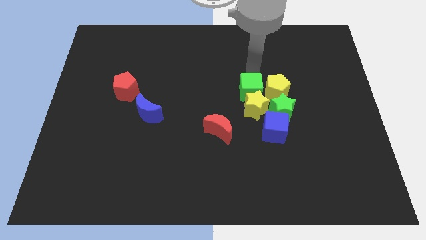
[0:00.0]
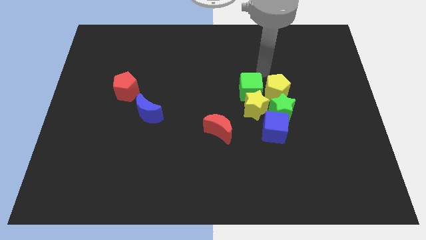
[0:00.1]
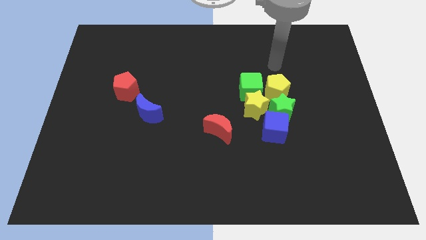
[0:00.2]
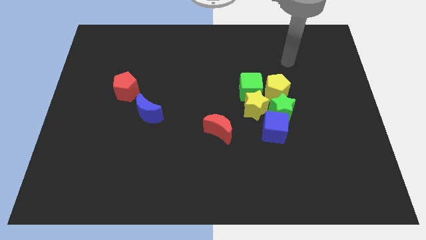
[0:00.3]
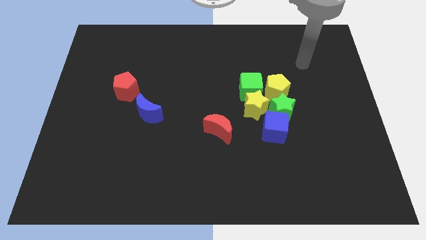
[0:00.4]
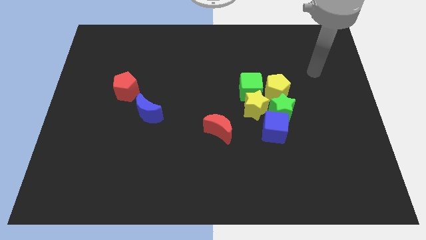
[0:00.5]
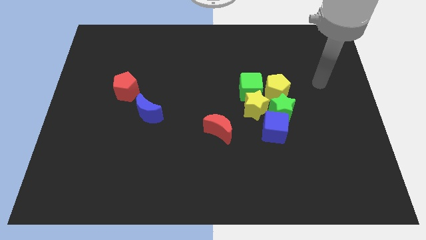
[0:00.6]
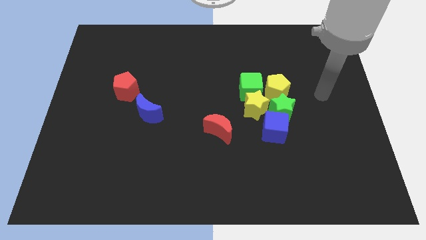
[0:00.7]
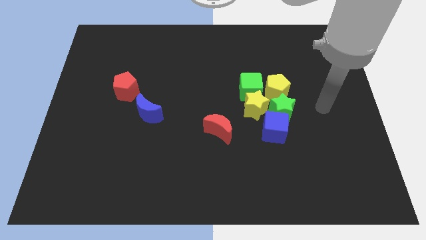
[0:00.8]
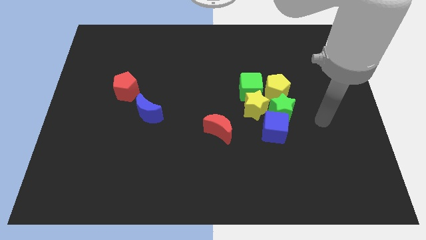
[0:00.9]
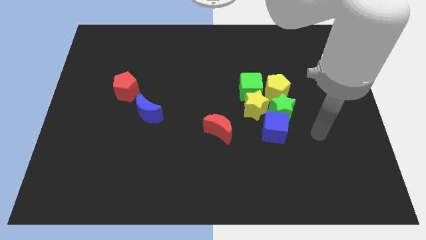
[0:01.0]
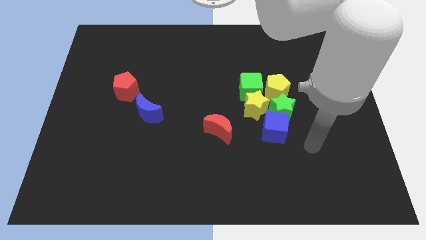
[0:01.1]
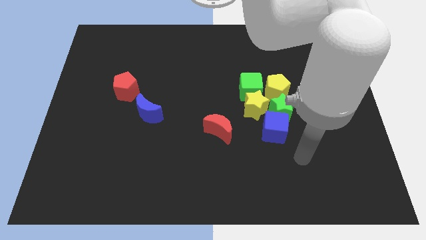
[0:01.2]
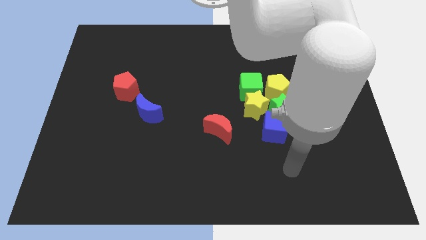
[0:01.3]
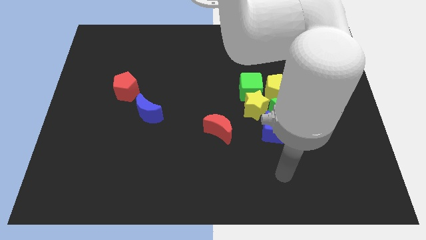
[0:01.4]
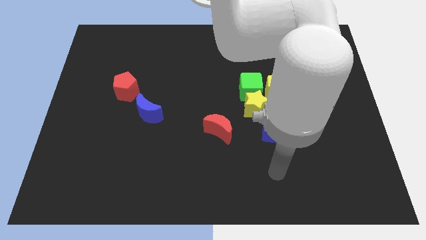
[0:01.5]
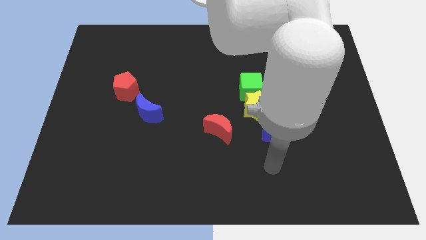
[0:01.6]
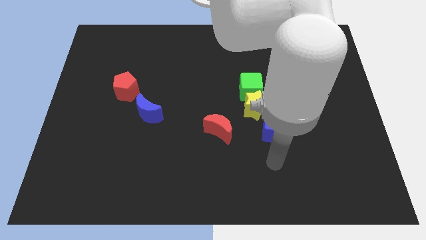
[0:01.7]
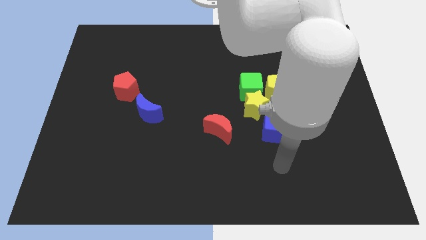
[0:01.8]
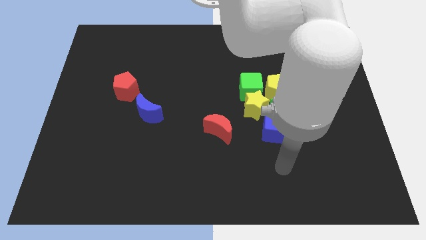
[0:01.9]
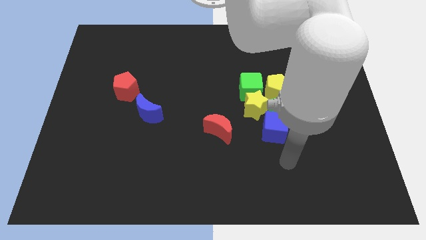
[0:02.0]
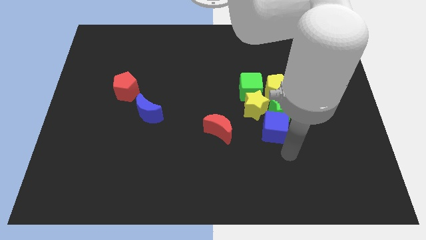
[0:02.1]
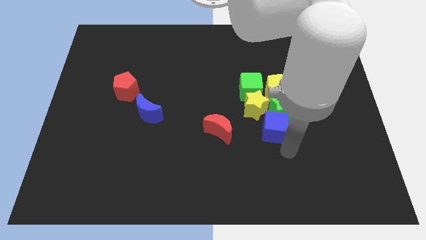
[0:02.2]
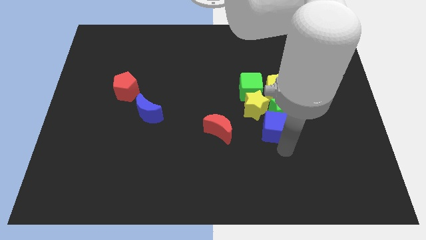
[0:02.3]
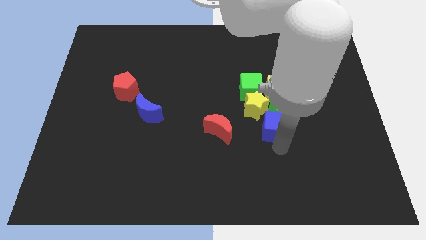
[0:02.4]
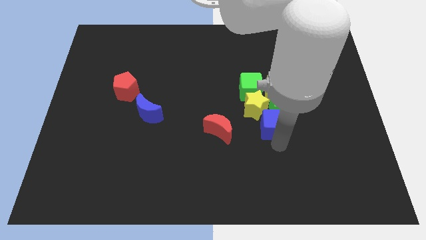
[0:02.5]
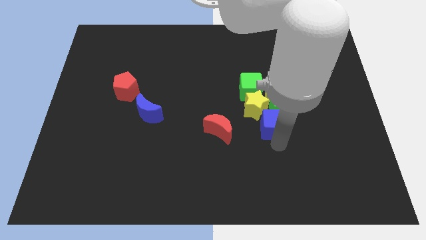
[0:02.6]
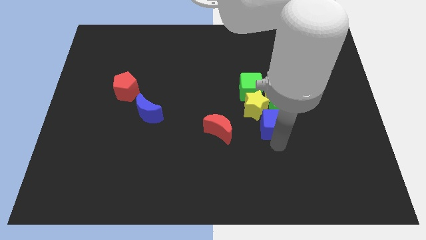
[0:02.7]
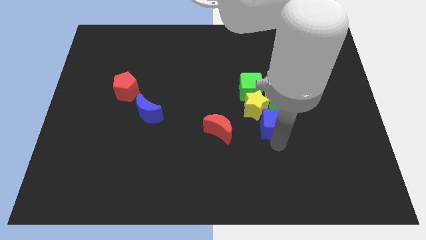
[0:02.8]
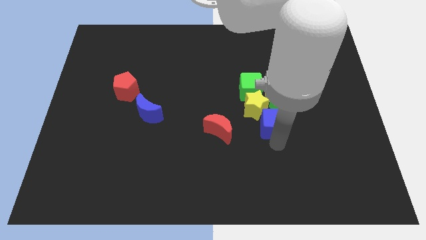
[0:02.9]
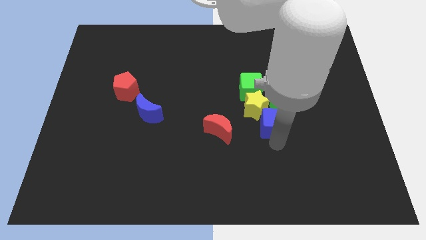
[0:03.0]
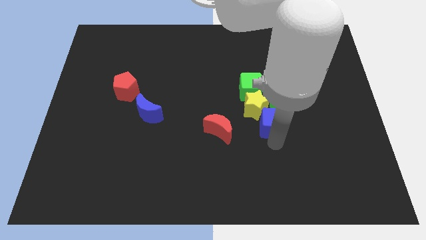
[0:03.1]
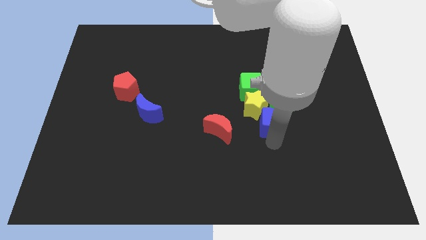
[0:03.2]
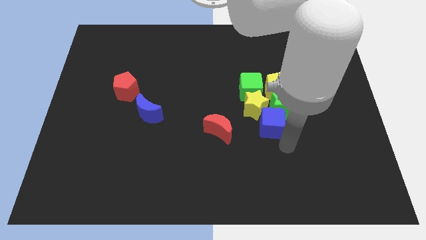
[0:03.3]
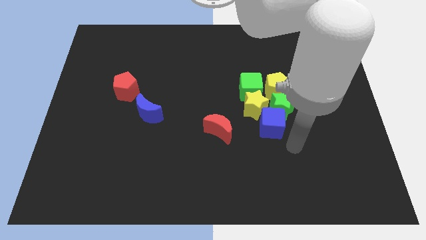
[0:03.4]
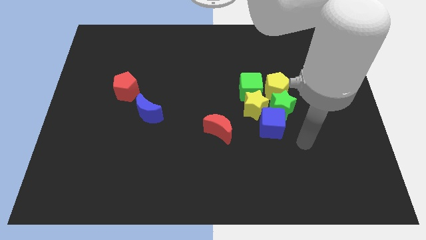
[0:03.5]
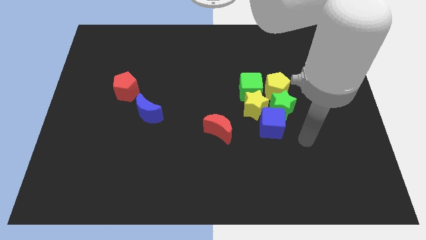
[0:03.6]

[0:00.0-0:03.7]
move blue cube into yellow star

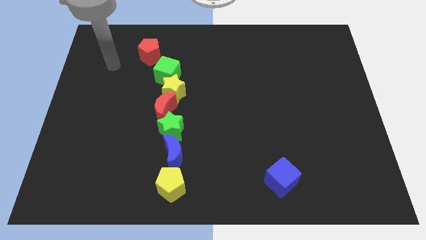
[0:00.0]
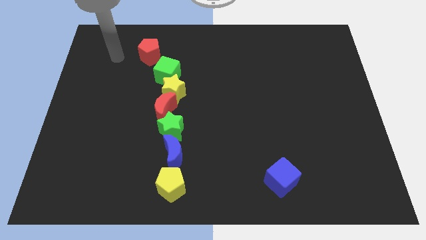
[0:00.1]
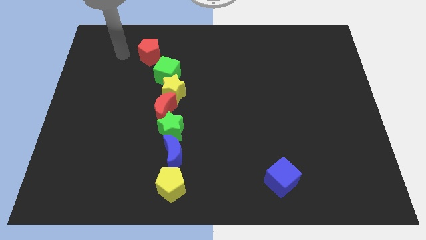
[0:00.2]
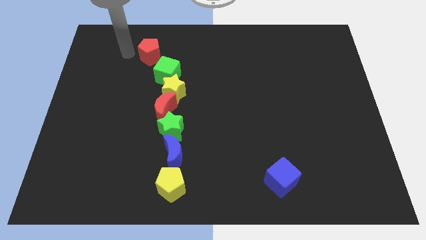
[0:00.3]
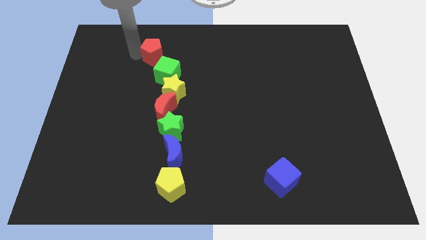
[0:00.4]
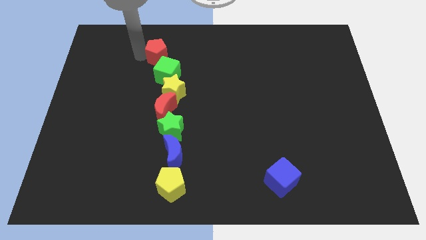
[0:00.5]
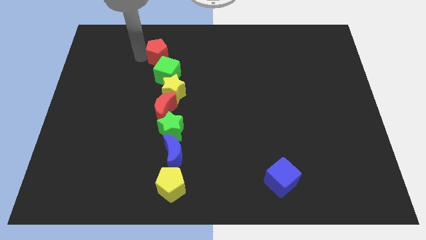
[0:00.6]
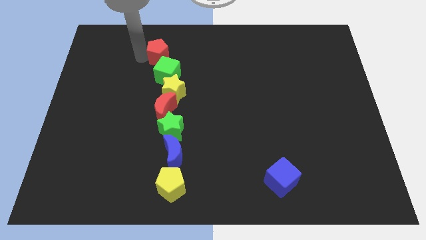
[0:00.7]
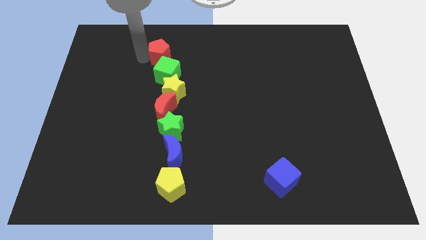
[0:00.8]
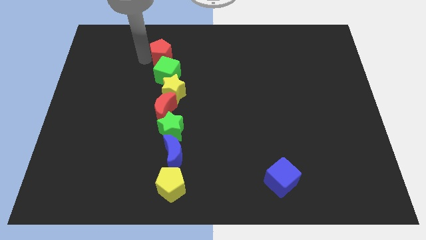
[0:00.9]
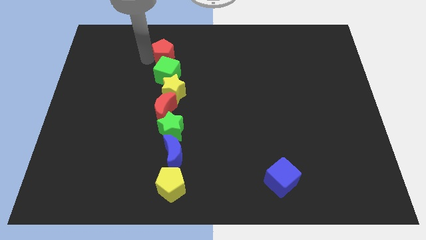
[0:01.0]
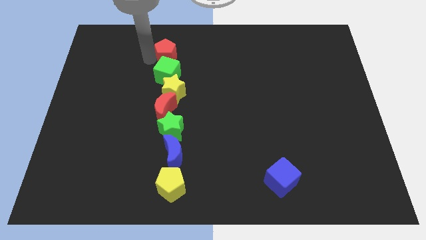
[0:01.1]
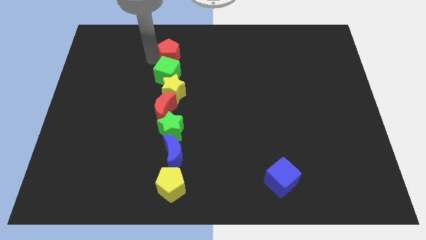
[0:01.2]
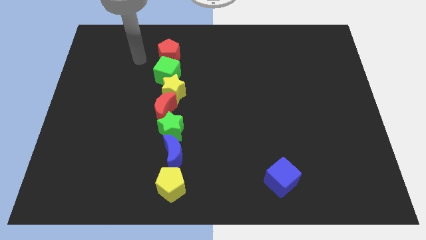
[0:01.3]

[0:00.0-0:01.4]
move red pentagon to the top of the green cube

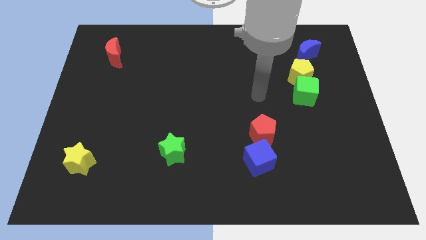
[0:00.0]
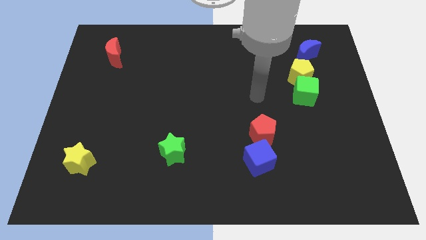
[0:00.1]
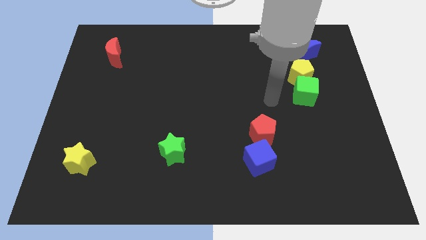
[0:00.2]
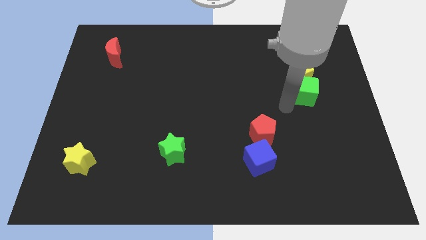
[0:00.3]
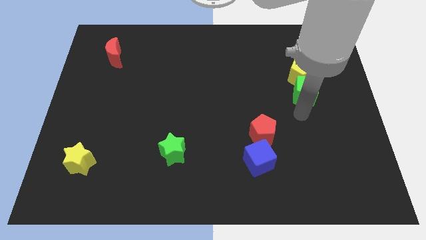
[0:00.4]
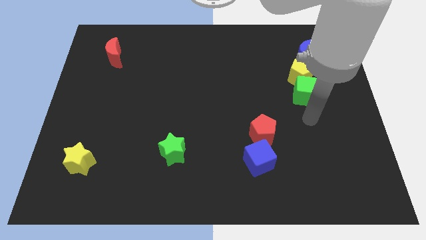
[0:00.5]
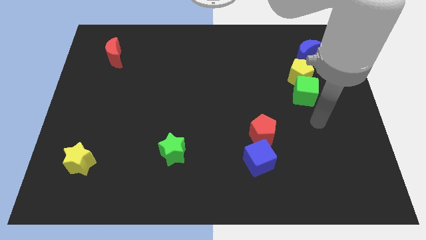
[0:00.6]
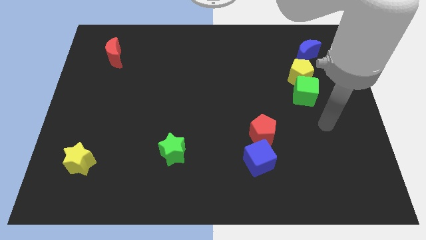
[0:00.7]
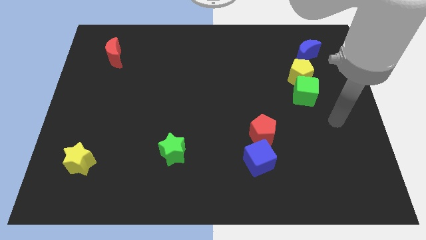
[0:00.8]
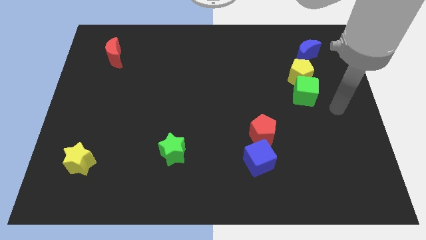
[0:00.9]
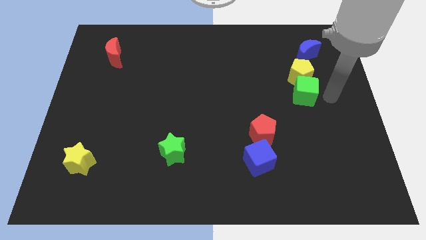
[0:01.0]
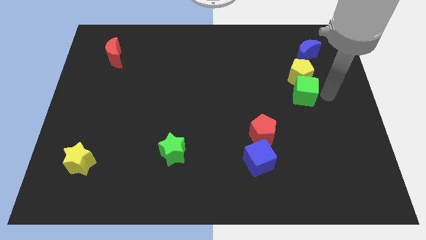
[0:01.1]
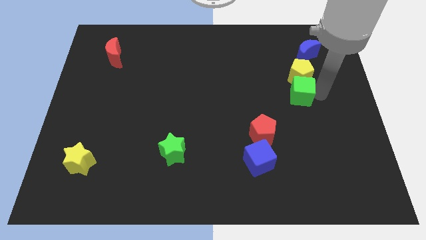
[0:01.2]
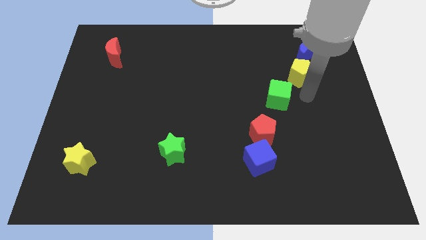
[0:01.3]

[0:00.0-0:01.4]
place your arm to the right of green cube

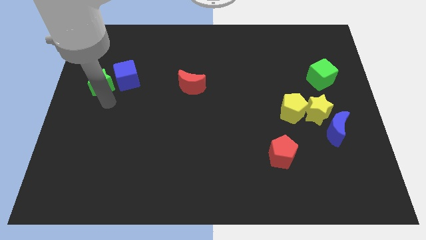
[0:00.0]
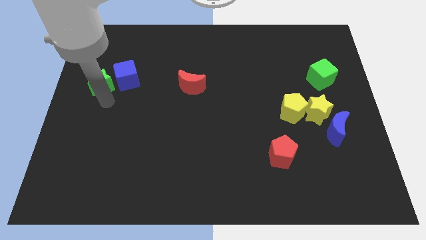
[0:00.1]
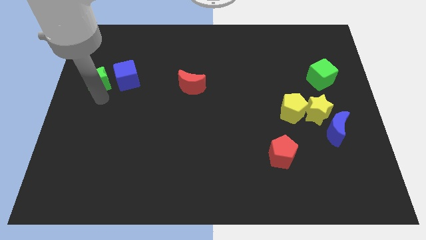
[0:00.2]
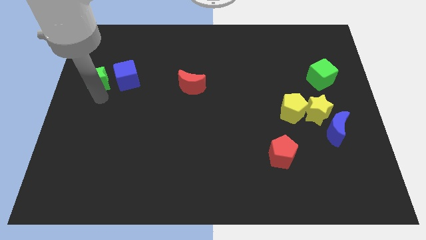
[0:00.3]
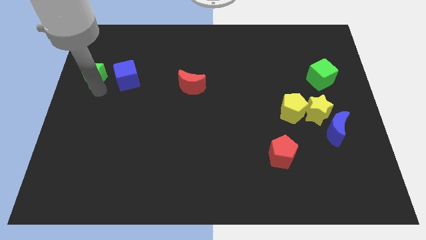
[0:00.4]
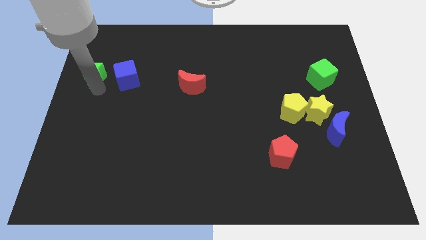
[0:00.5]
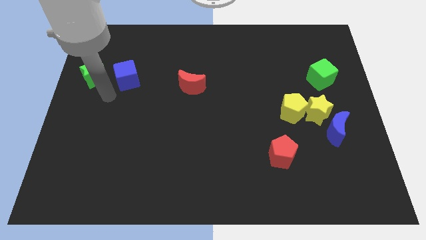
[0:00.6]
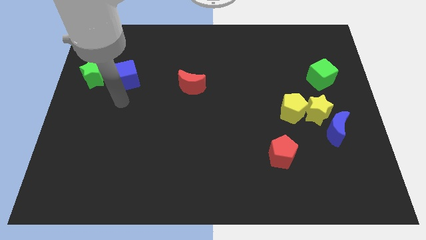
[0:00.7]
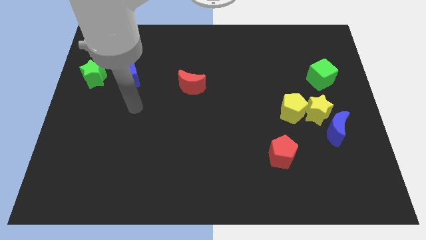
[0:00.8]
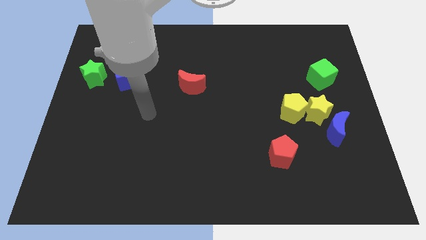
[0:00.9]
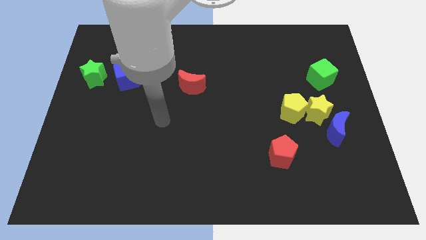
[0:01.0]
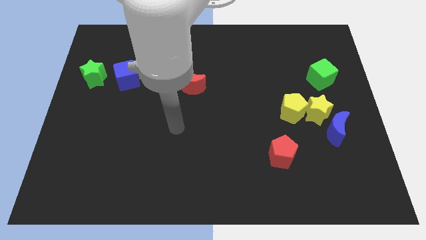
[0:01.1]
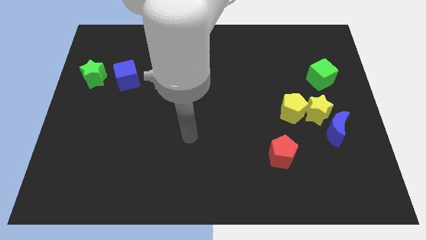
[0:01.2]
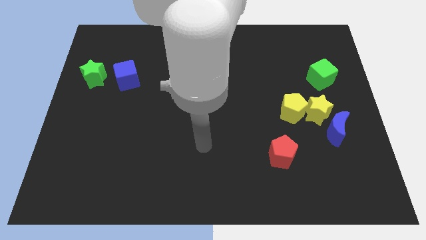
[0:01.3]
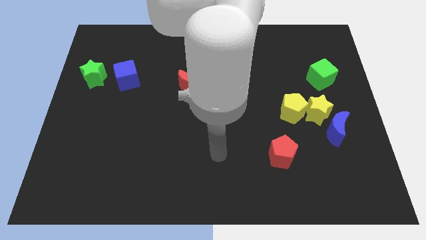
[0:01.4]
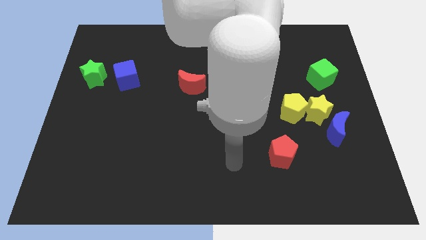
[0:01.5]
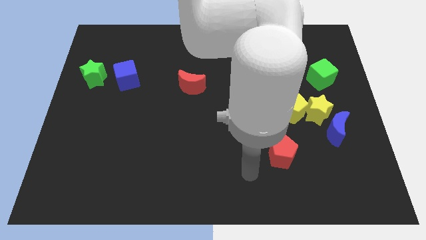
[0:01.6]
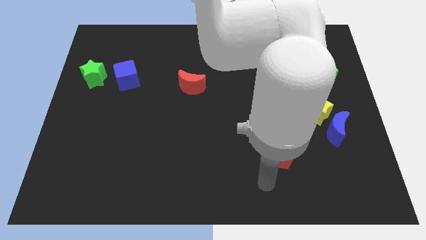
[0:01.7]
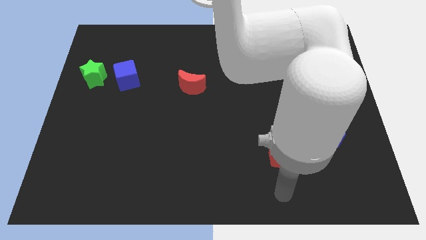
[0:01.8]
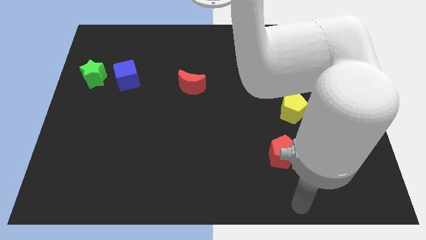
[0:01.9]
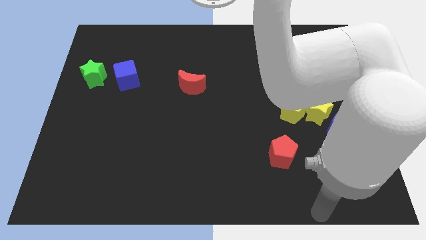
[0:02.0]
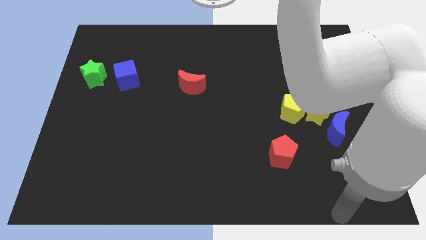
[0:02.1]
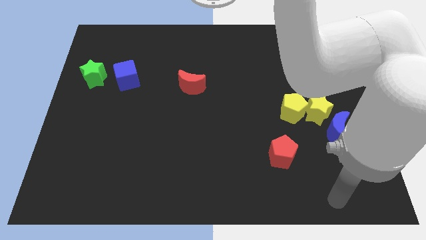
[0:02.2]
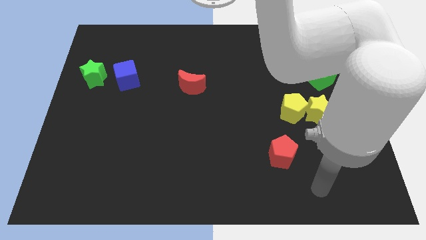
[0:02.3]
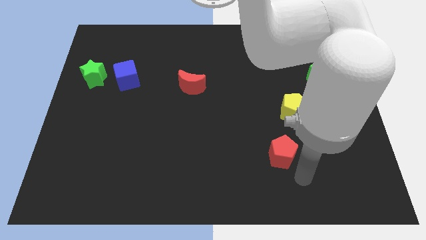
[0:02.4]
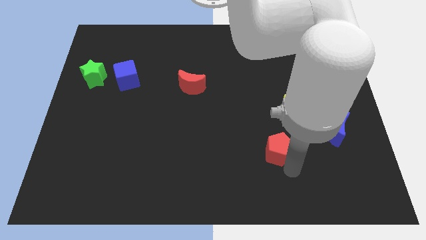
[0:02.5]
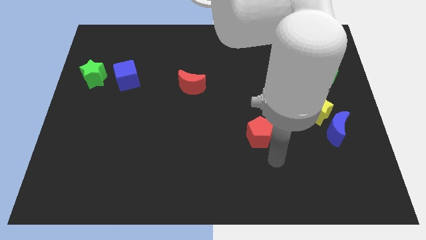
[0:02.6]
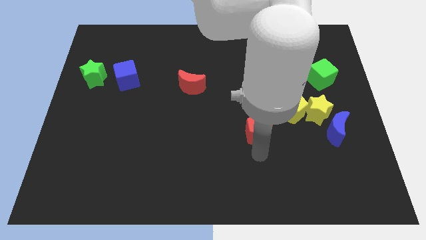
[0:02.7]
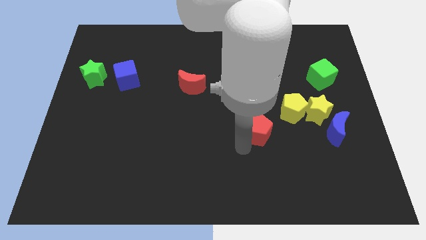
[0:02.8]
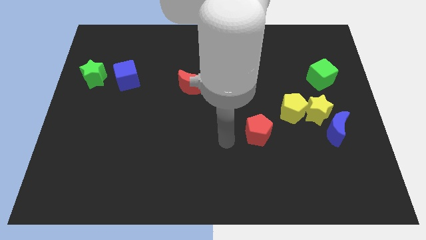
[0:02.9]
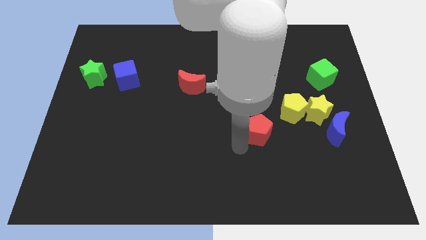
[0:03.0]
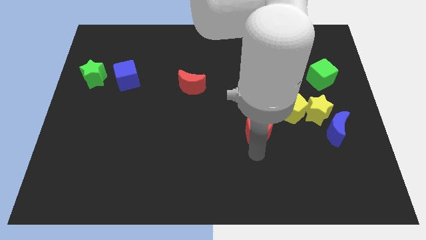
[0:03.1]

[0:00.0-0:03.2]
push the red pentagon towards top
